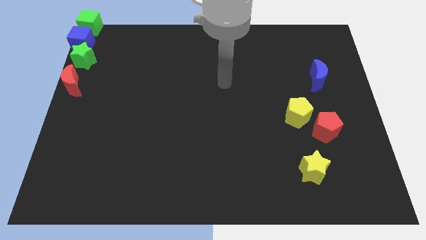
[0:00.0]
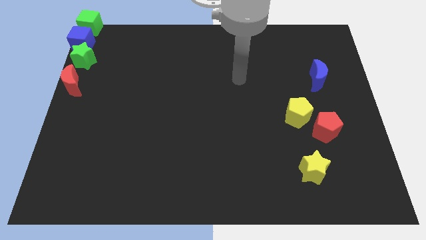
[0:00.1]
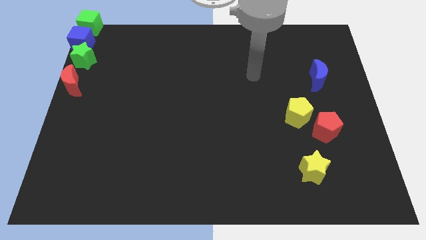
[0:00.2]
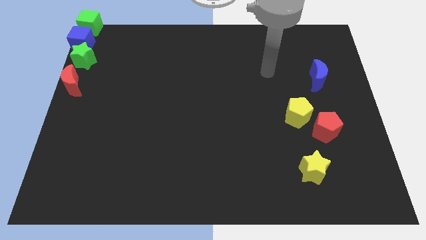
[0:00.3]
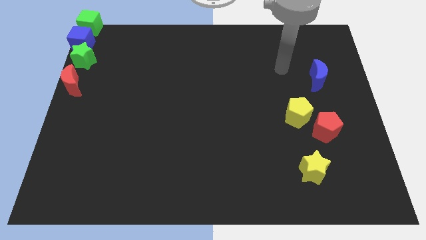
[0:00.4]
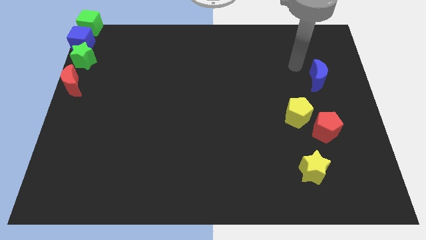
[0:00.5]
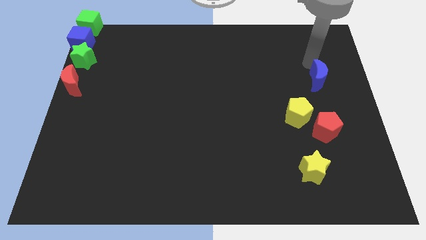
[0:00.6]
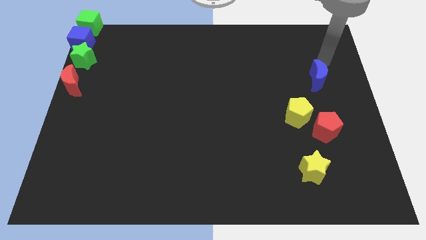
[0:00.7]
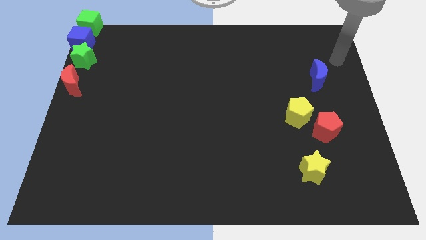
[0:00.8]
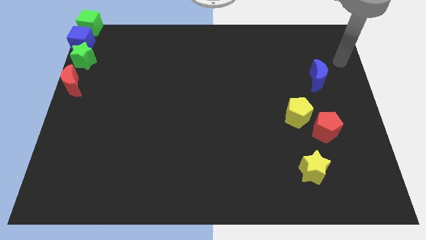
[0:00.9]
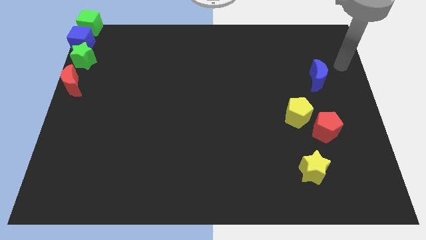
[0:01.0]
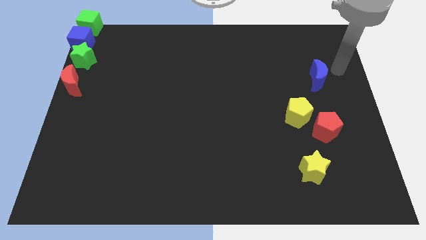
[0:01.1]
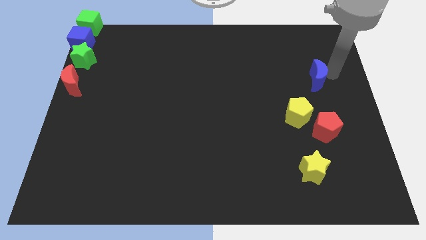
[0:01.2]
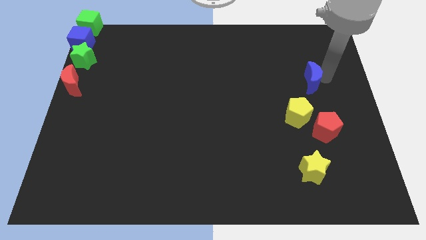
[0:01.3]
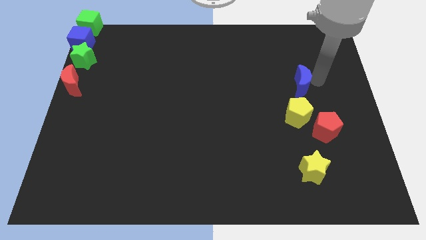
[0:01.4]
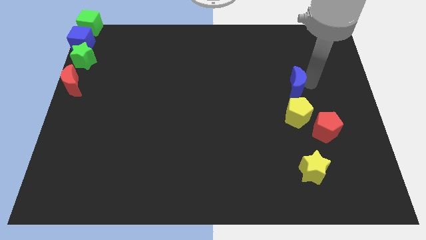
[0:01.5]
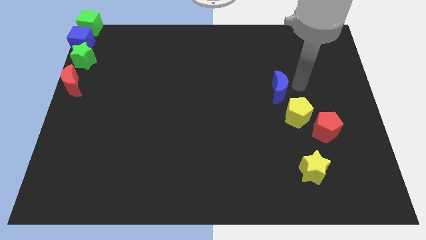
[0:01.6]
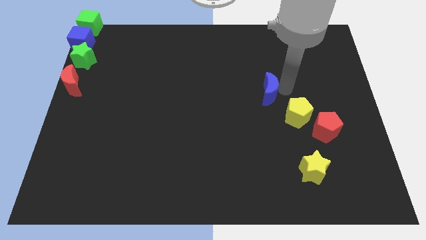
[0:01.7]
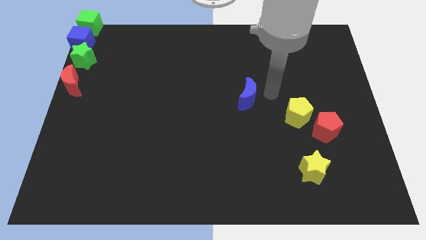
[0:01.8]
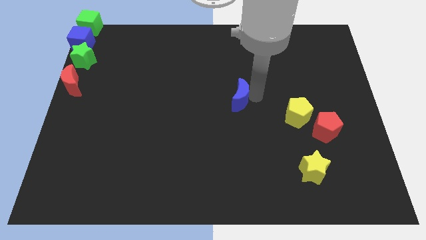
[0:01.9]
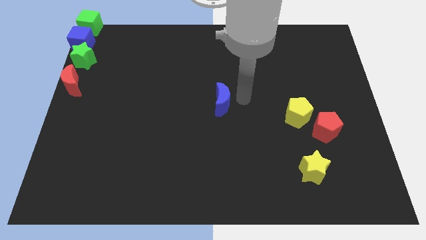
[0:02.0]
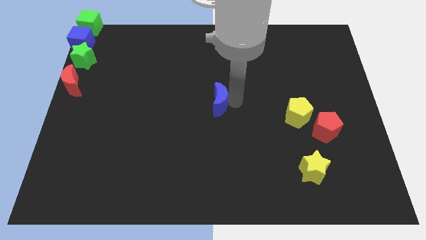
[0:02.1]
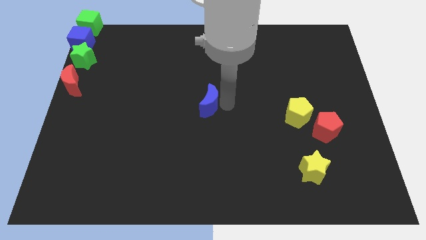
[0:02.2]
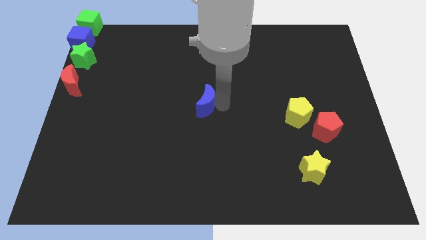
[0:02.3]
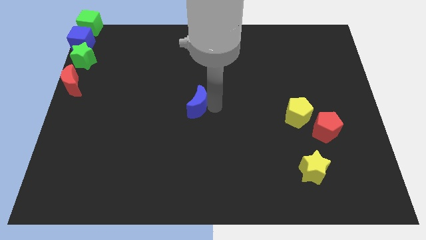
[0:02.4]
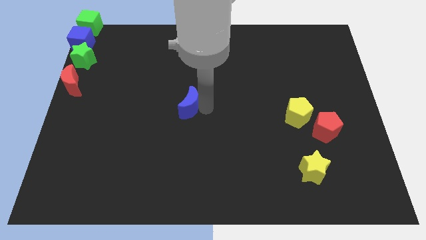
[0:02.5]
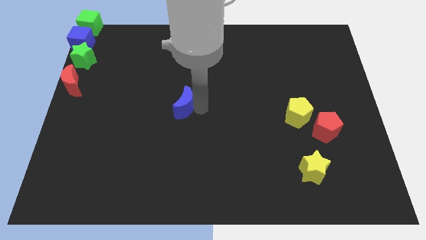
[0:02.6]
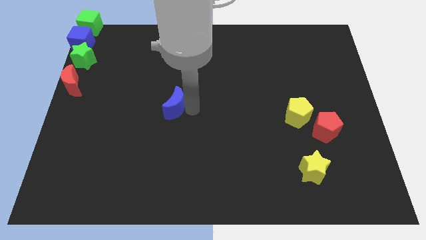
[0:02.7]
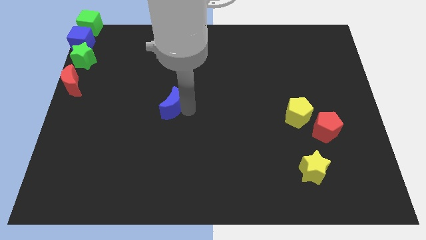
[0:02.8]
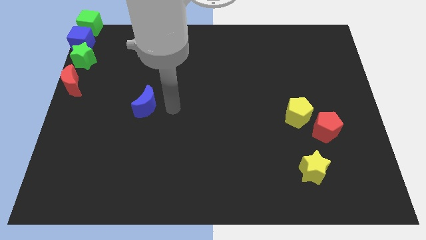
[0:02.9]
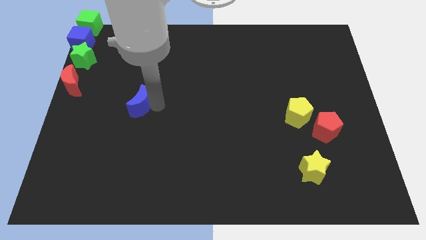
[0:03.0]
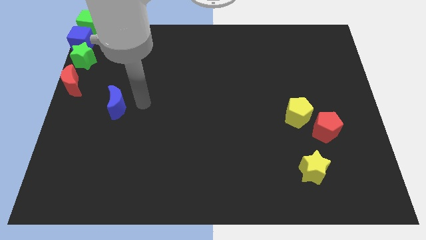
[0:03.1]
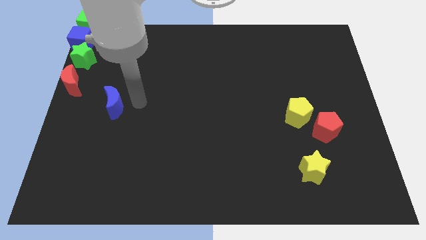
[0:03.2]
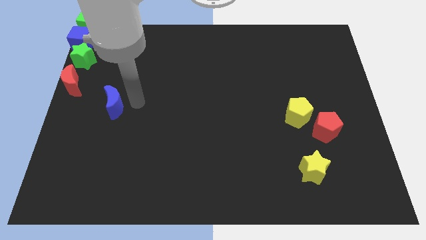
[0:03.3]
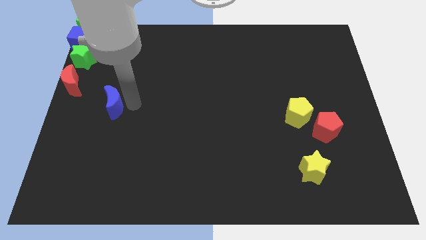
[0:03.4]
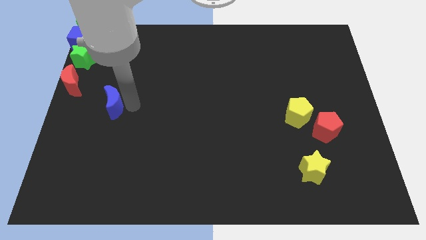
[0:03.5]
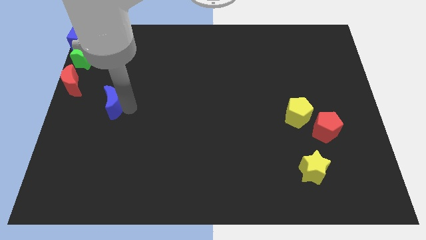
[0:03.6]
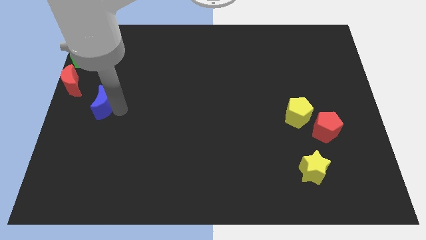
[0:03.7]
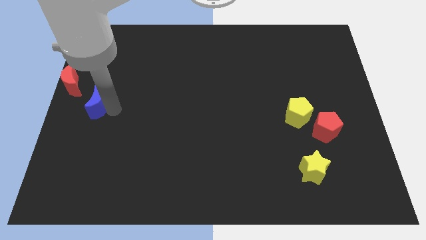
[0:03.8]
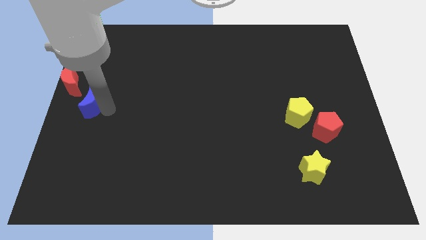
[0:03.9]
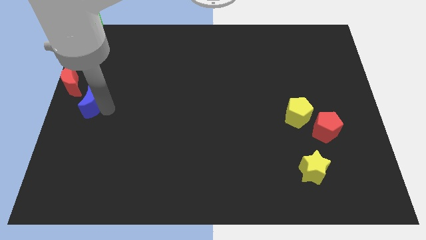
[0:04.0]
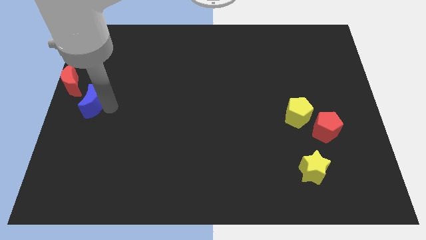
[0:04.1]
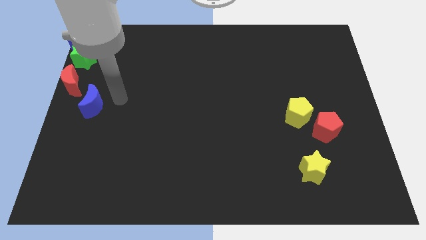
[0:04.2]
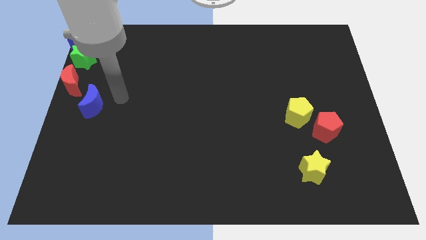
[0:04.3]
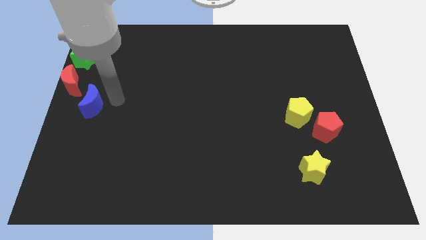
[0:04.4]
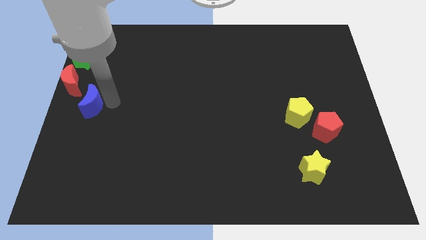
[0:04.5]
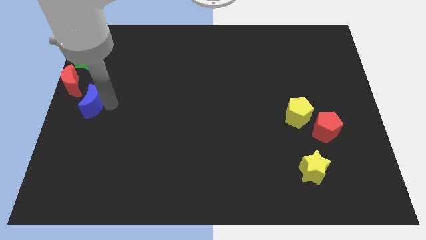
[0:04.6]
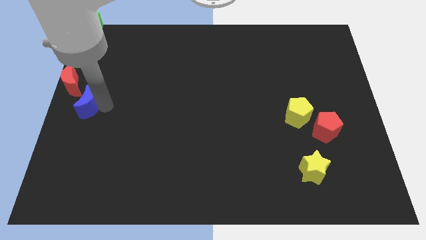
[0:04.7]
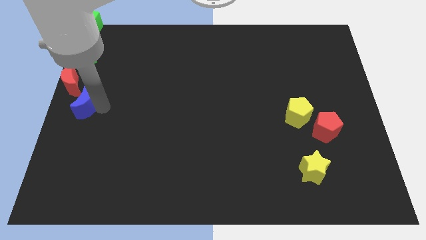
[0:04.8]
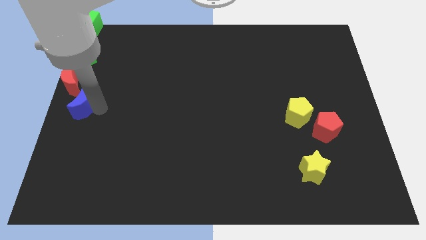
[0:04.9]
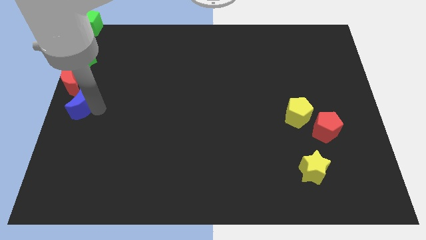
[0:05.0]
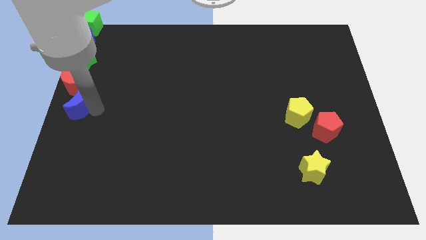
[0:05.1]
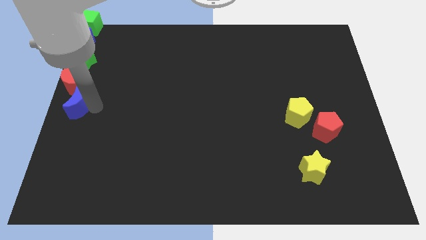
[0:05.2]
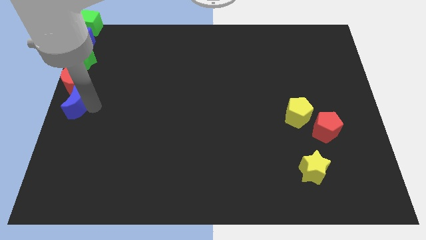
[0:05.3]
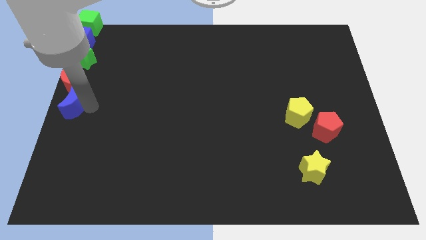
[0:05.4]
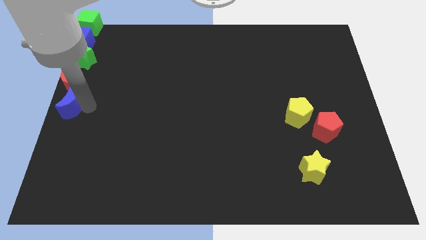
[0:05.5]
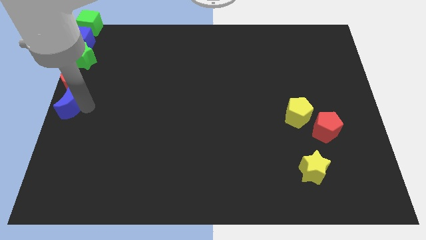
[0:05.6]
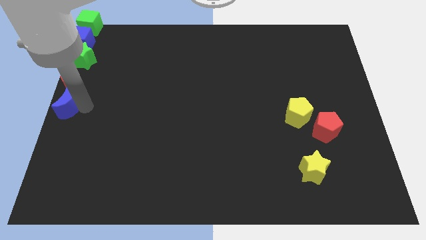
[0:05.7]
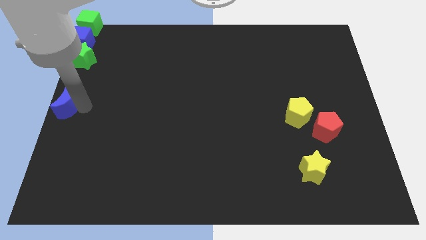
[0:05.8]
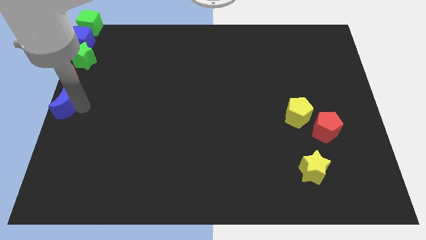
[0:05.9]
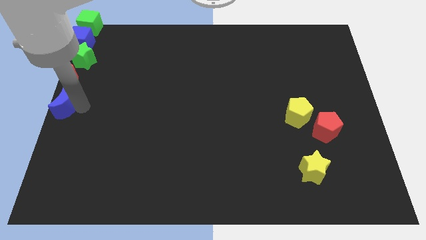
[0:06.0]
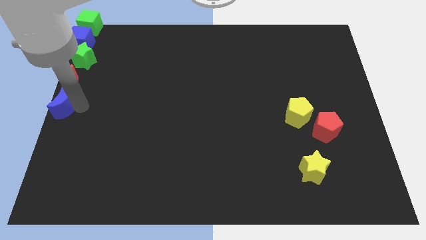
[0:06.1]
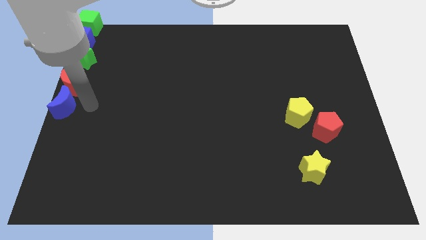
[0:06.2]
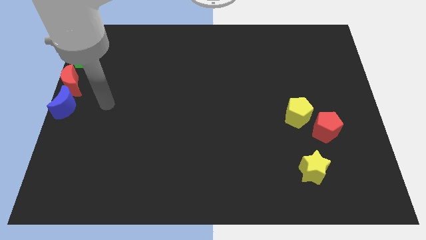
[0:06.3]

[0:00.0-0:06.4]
push the blue crescent to the left center

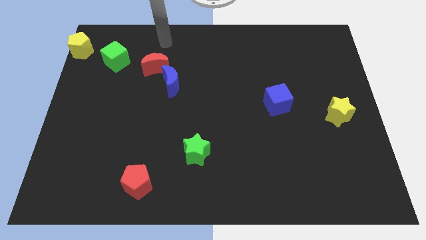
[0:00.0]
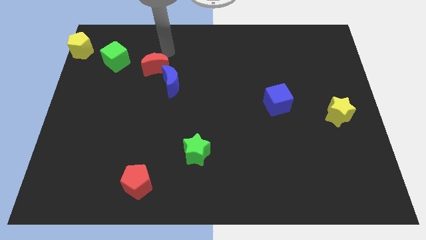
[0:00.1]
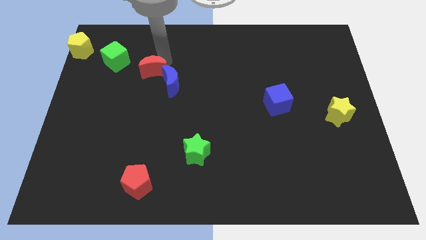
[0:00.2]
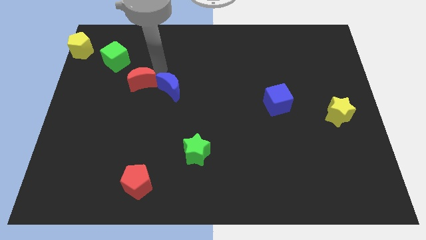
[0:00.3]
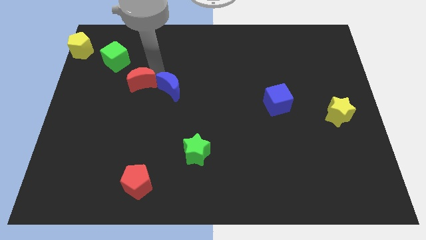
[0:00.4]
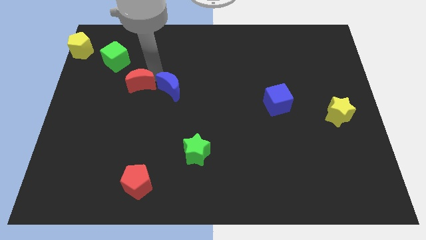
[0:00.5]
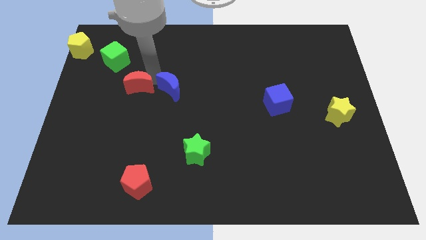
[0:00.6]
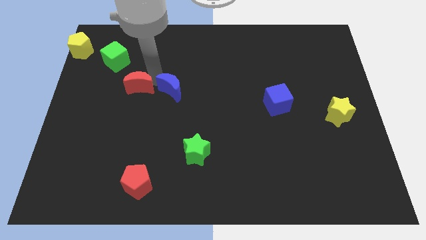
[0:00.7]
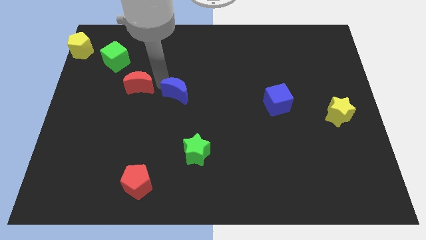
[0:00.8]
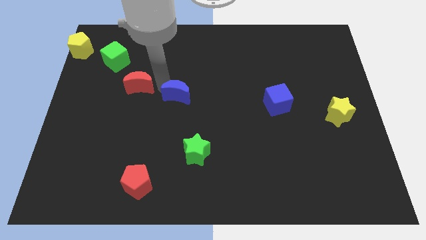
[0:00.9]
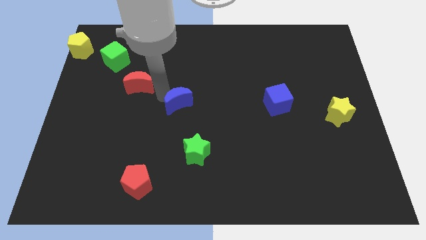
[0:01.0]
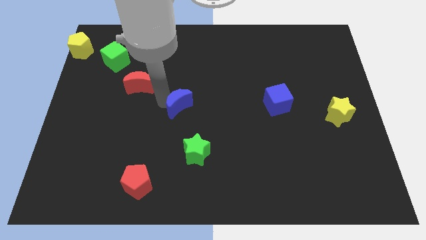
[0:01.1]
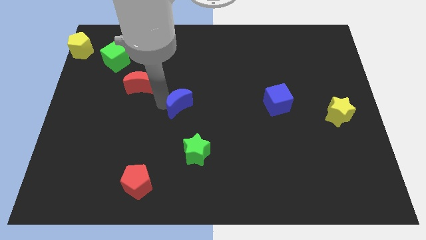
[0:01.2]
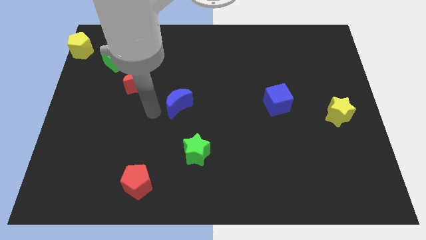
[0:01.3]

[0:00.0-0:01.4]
separate red moon and blue moon

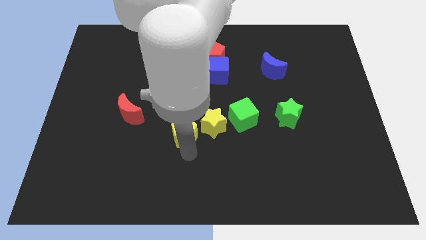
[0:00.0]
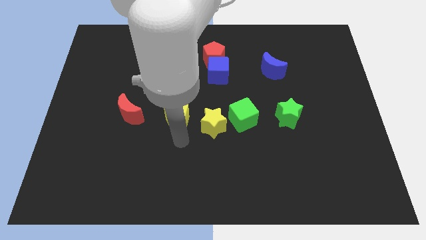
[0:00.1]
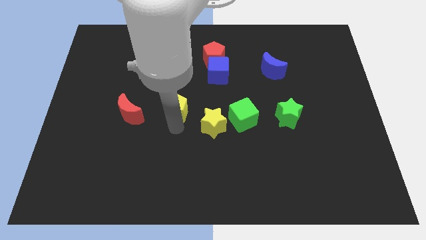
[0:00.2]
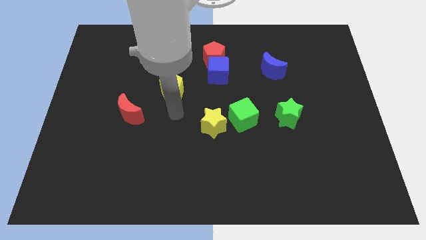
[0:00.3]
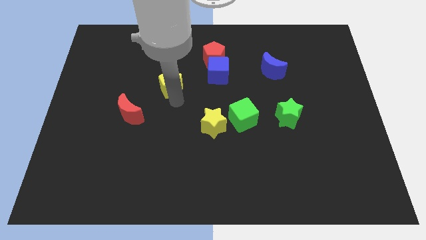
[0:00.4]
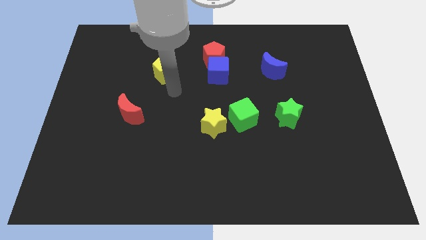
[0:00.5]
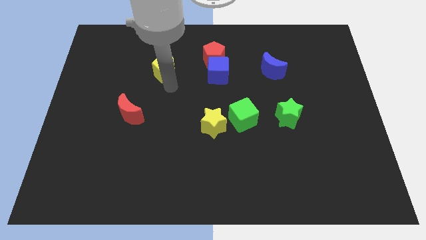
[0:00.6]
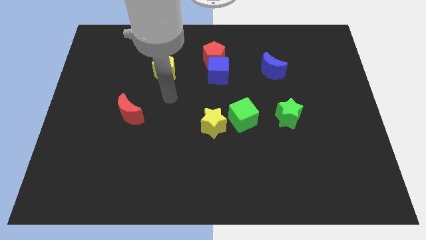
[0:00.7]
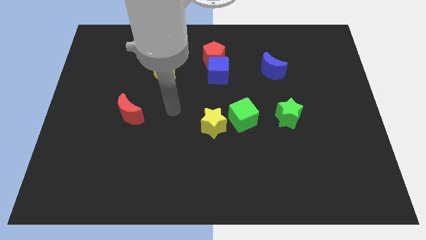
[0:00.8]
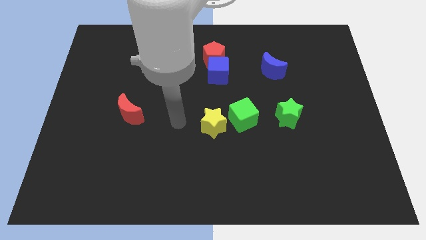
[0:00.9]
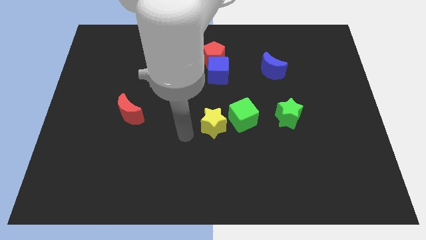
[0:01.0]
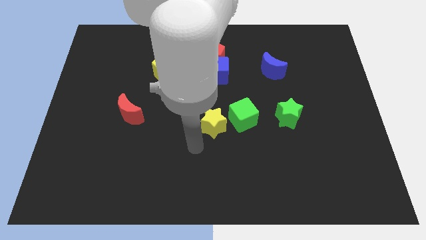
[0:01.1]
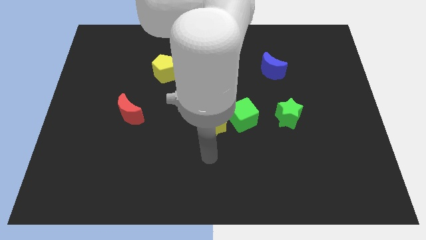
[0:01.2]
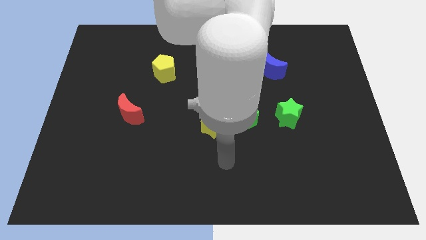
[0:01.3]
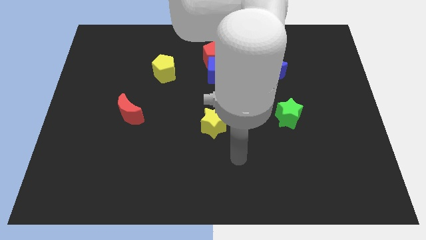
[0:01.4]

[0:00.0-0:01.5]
place the yellow pentagon at the left side of the blue cube
